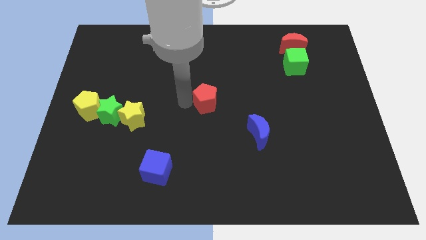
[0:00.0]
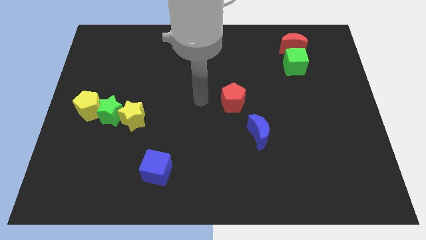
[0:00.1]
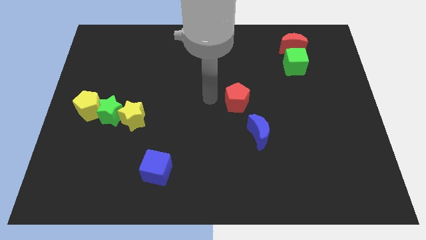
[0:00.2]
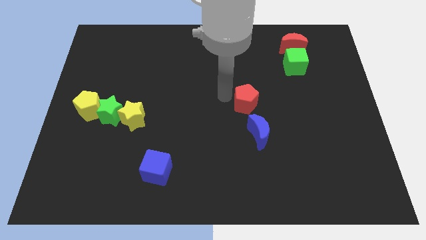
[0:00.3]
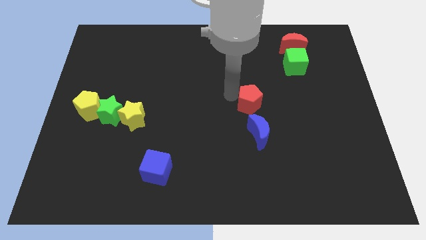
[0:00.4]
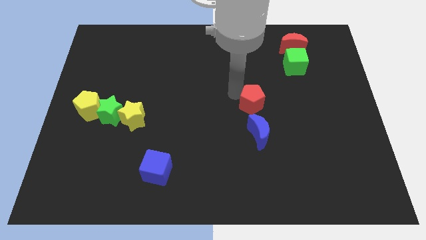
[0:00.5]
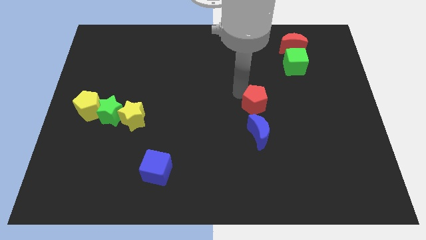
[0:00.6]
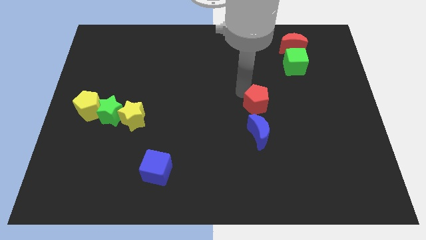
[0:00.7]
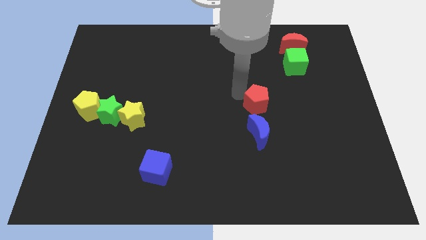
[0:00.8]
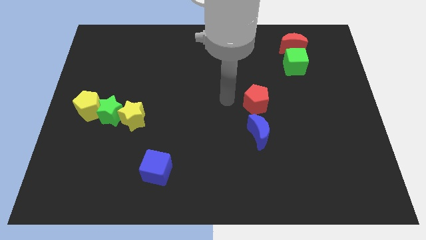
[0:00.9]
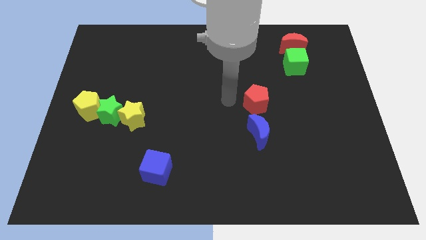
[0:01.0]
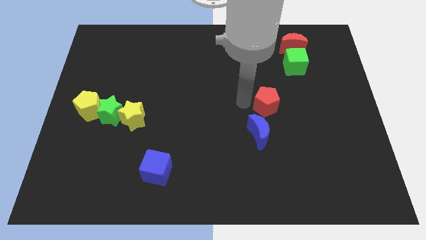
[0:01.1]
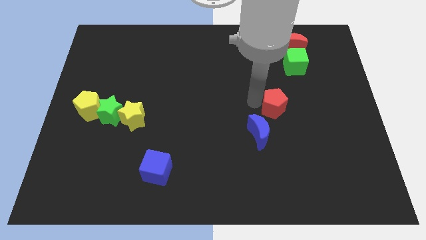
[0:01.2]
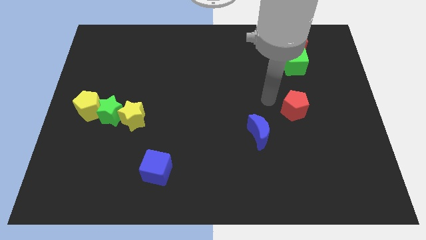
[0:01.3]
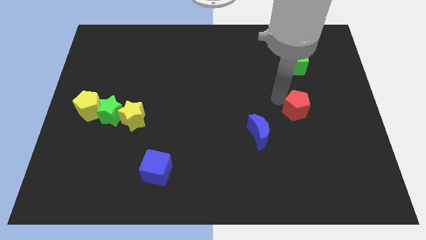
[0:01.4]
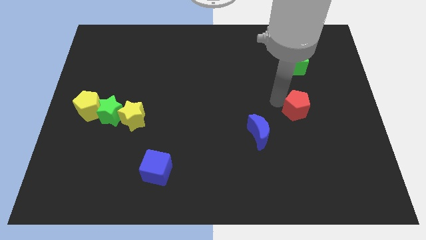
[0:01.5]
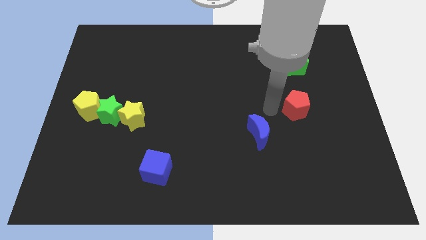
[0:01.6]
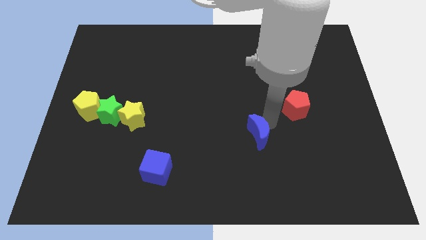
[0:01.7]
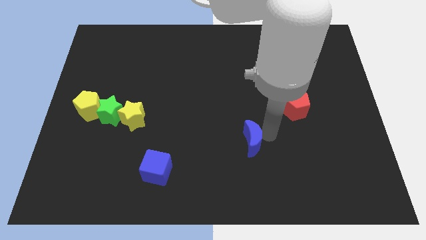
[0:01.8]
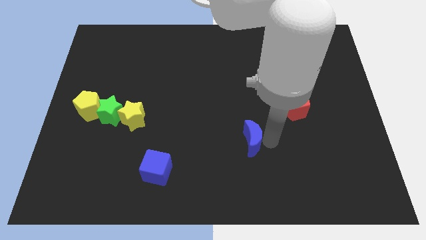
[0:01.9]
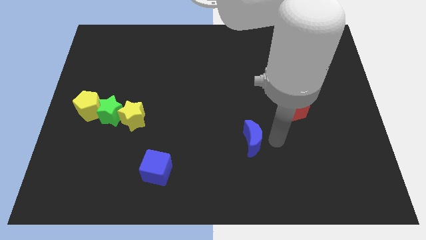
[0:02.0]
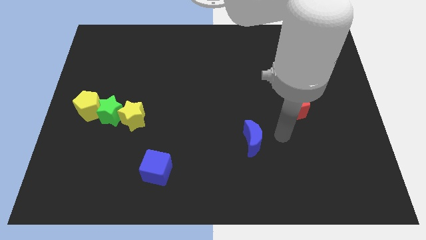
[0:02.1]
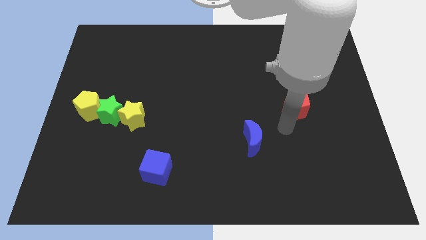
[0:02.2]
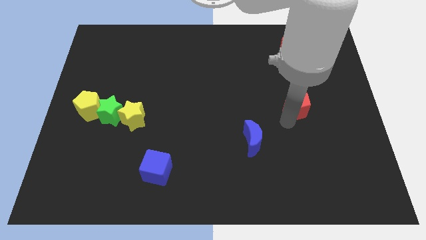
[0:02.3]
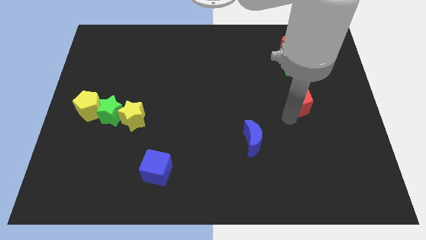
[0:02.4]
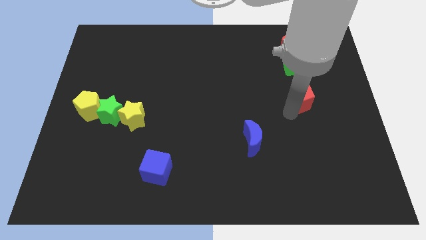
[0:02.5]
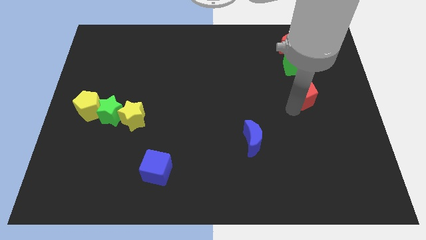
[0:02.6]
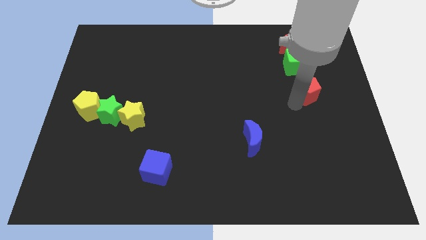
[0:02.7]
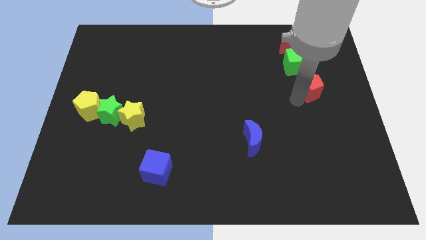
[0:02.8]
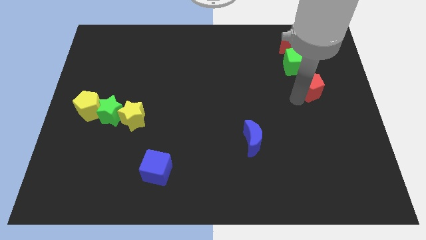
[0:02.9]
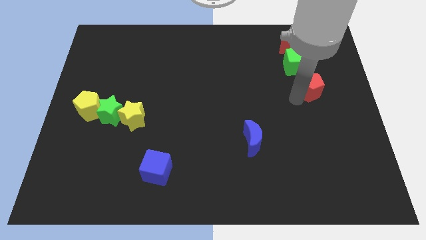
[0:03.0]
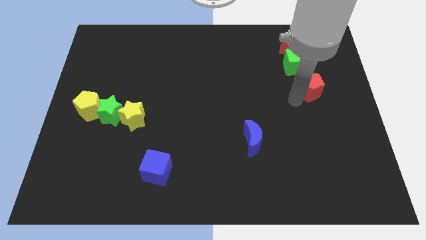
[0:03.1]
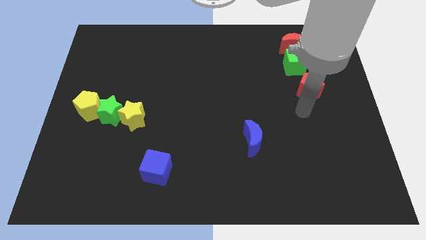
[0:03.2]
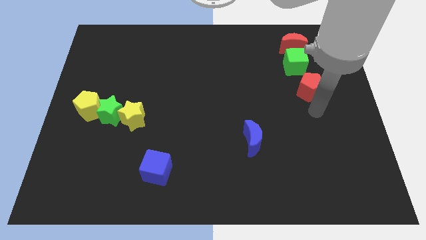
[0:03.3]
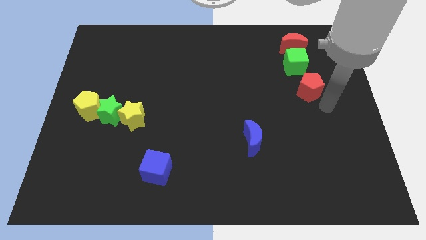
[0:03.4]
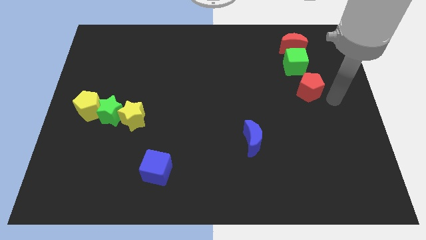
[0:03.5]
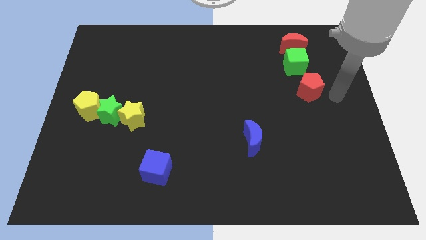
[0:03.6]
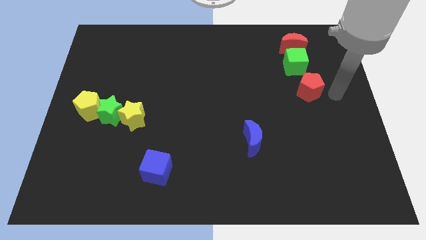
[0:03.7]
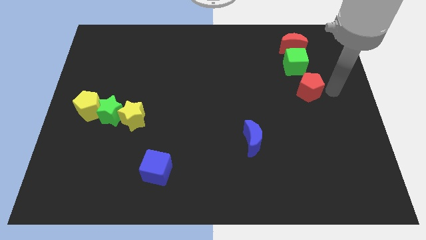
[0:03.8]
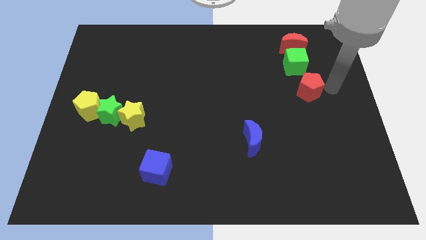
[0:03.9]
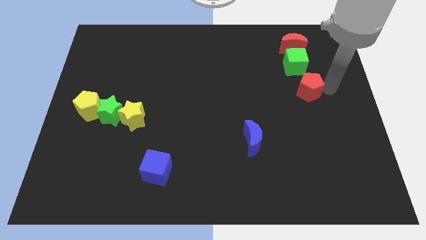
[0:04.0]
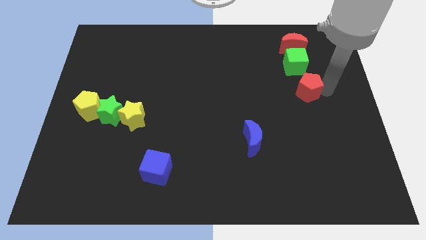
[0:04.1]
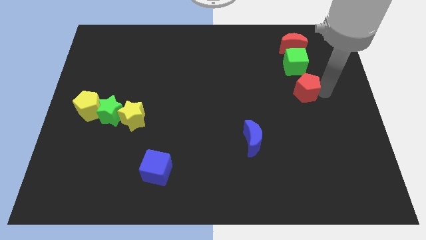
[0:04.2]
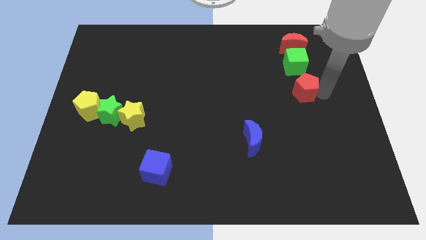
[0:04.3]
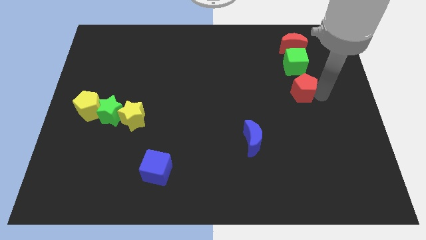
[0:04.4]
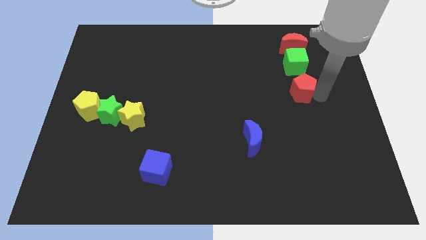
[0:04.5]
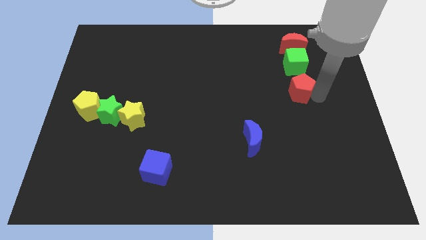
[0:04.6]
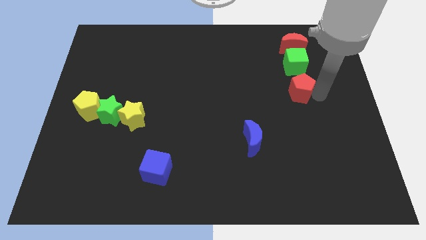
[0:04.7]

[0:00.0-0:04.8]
push the red pentagon to the bottom of the green cube

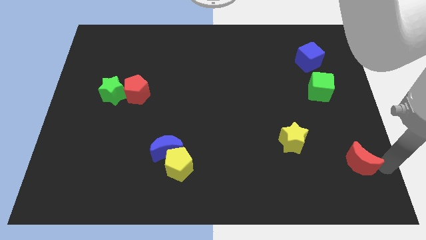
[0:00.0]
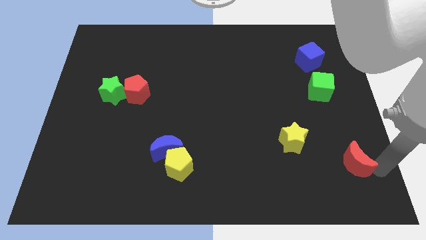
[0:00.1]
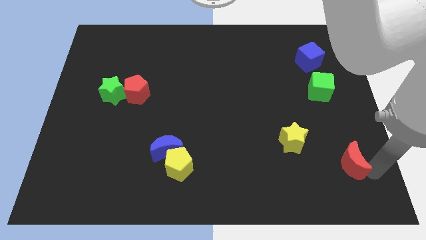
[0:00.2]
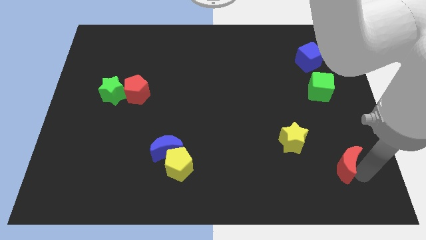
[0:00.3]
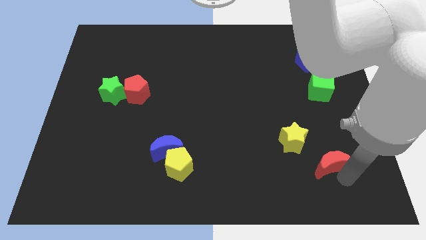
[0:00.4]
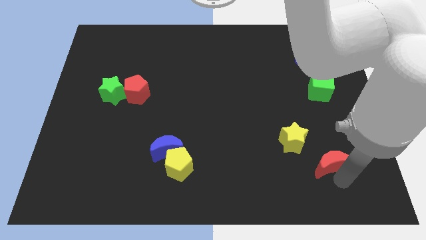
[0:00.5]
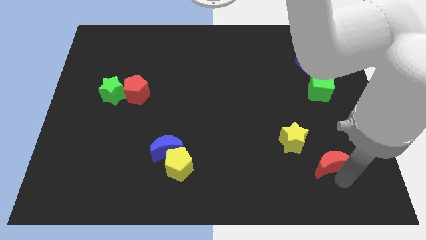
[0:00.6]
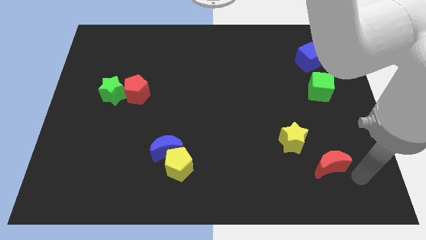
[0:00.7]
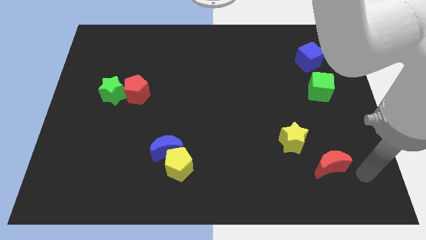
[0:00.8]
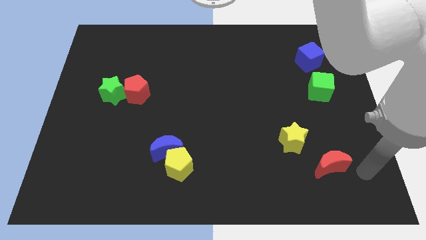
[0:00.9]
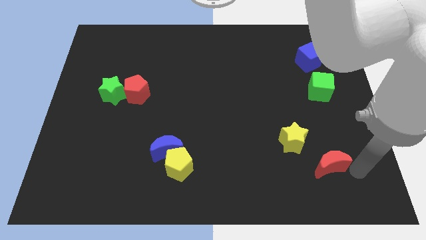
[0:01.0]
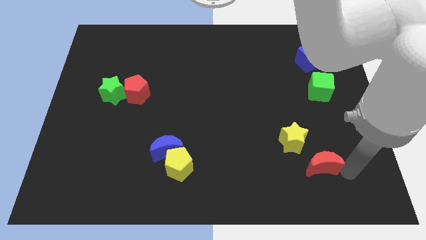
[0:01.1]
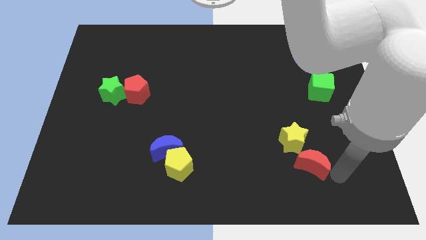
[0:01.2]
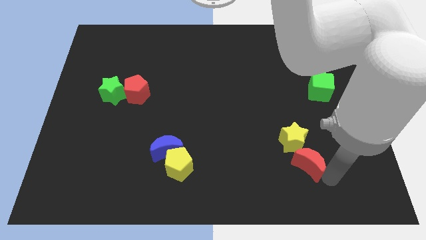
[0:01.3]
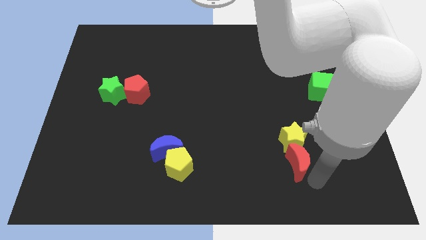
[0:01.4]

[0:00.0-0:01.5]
put the red moon below the yellow star

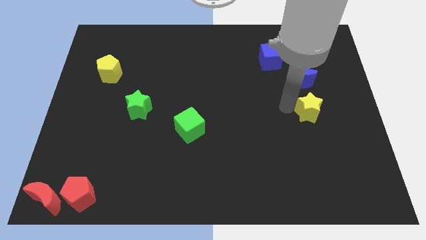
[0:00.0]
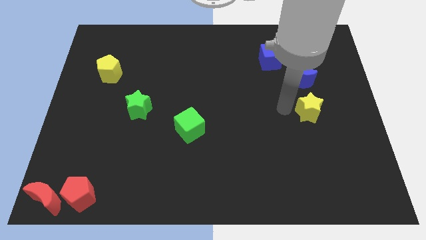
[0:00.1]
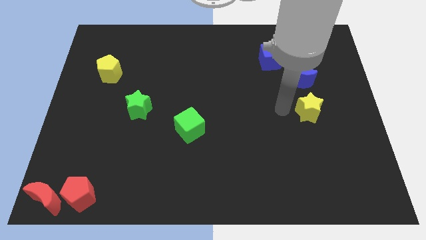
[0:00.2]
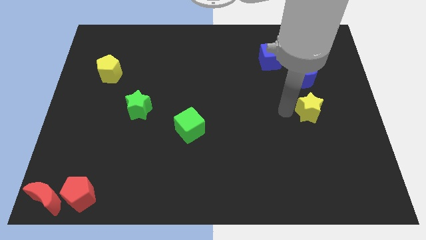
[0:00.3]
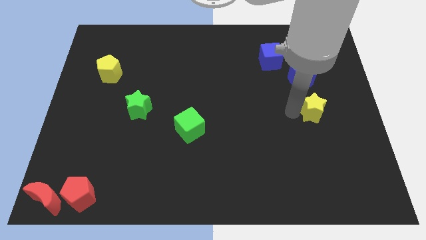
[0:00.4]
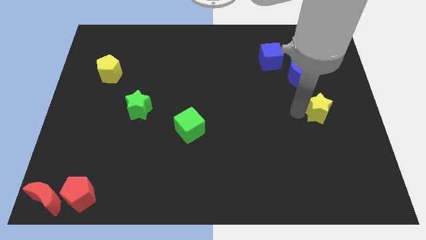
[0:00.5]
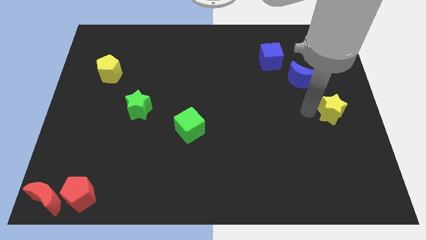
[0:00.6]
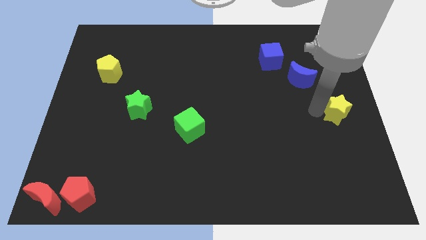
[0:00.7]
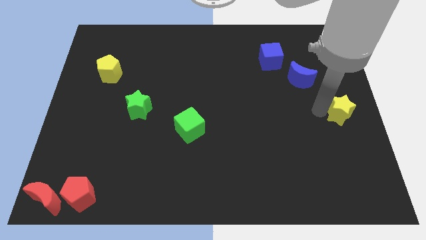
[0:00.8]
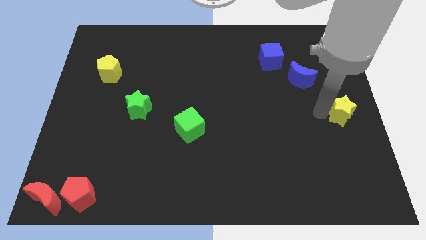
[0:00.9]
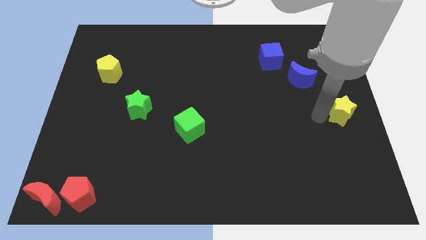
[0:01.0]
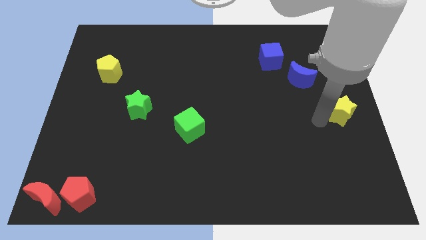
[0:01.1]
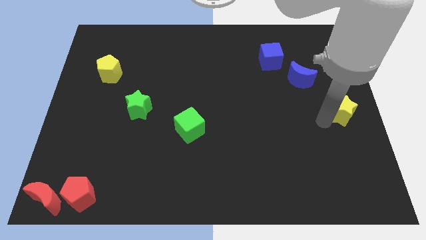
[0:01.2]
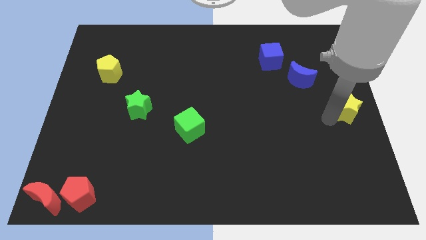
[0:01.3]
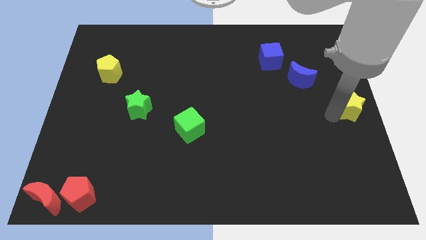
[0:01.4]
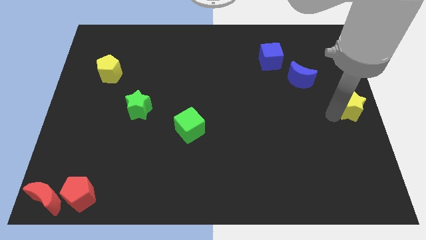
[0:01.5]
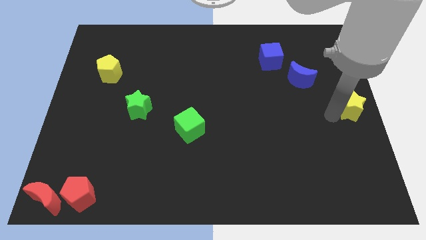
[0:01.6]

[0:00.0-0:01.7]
push the yellow star to the right center of the board

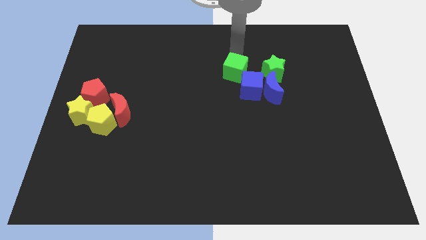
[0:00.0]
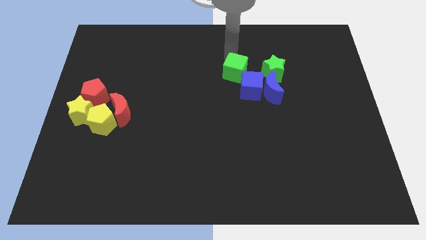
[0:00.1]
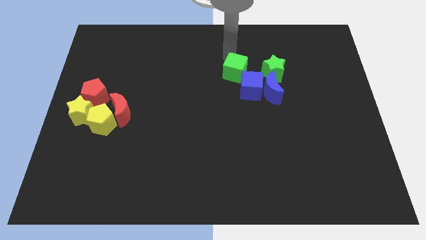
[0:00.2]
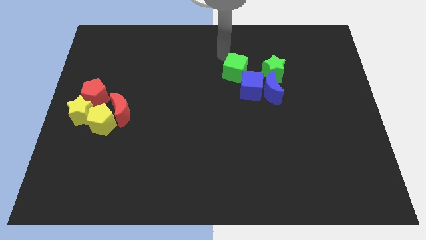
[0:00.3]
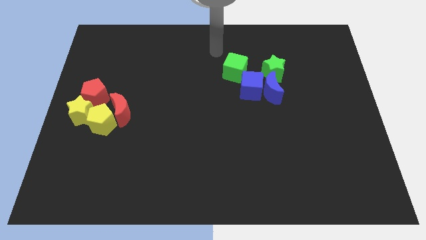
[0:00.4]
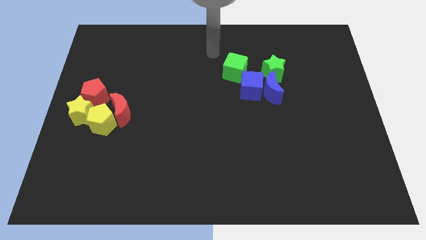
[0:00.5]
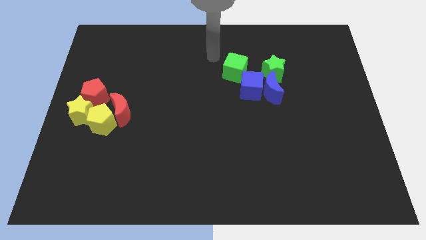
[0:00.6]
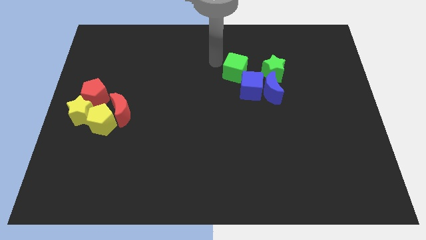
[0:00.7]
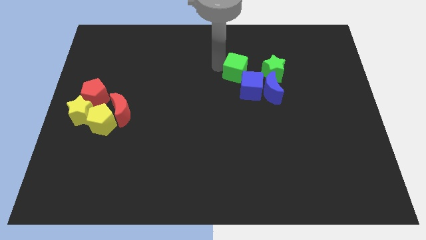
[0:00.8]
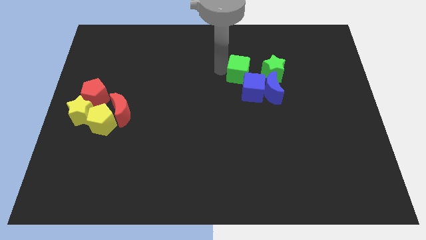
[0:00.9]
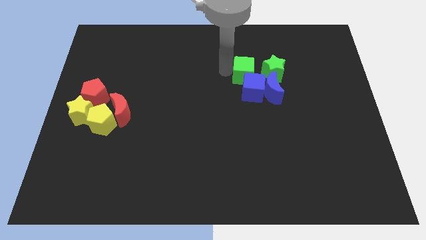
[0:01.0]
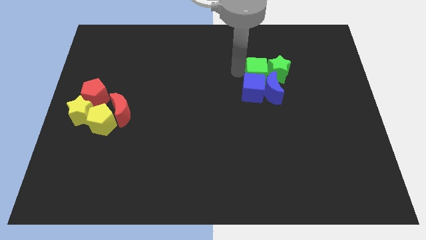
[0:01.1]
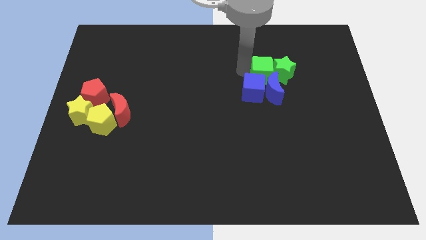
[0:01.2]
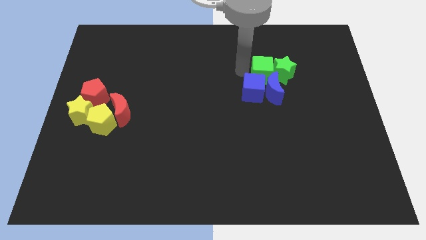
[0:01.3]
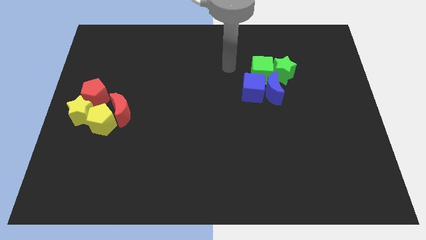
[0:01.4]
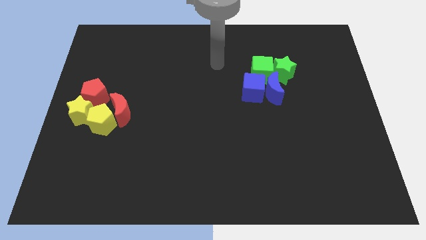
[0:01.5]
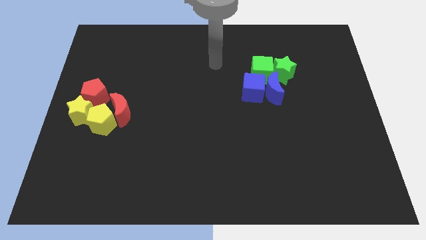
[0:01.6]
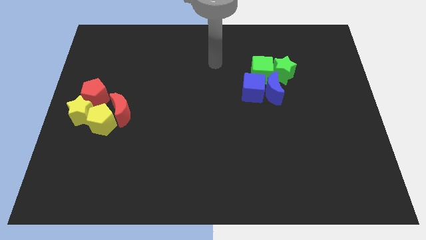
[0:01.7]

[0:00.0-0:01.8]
push green cube slightly towards right
